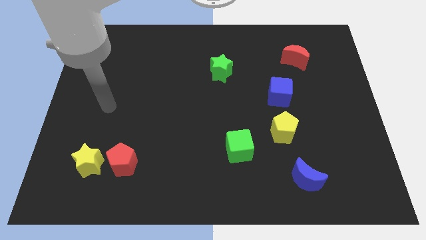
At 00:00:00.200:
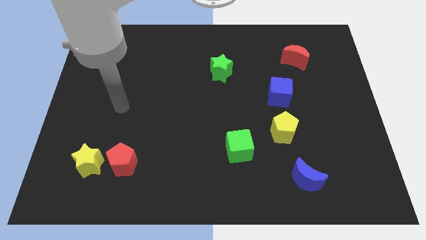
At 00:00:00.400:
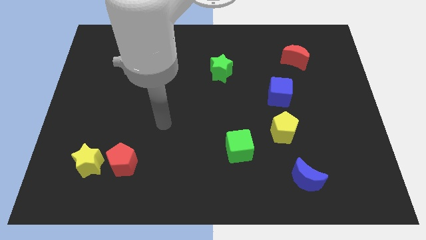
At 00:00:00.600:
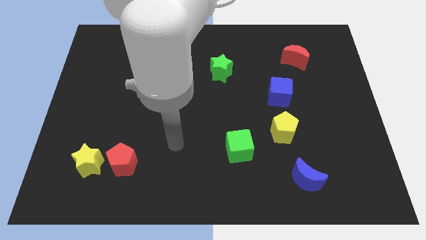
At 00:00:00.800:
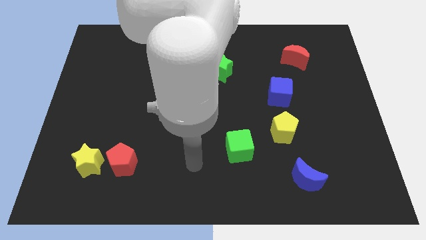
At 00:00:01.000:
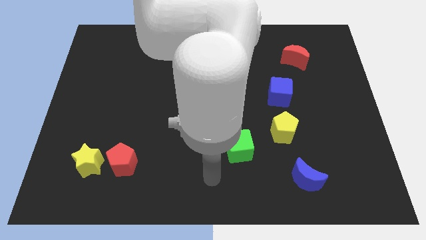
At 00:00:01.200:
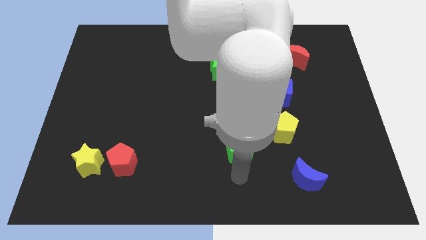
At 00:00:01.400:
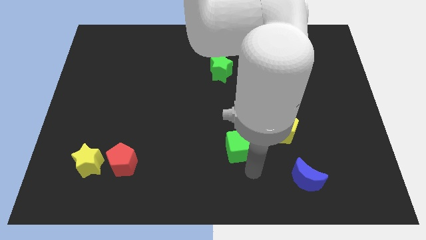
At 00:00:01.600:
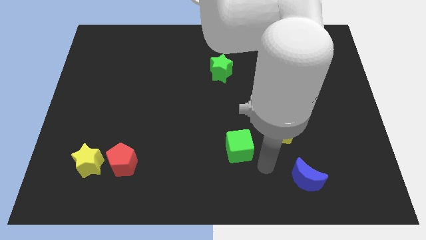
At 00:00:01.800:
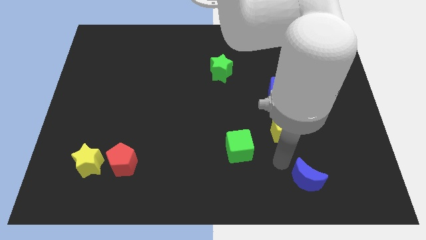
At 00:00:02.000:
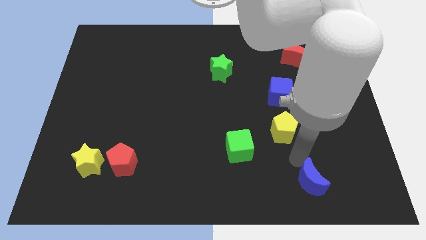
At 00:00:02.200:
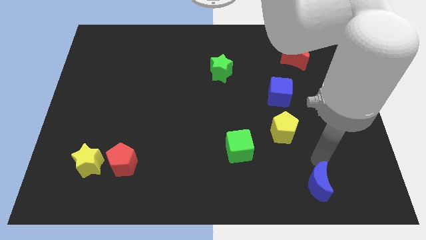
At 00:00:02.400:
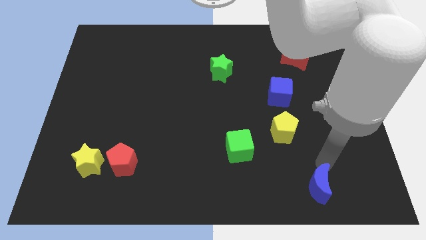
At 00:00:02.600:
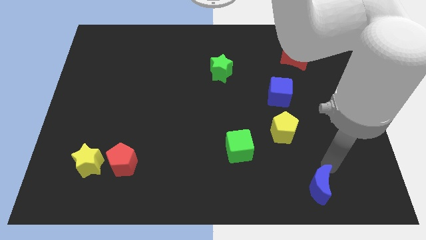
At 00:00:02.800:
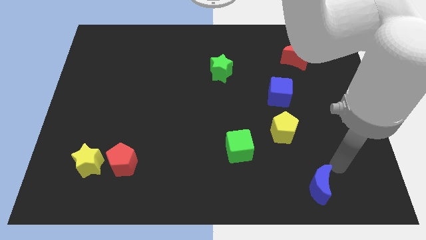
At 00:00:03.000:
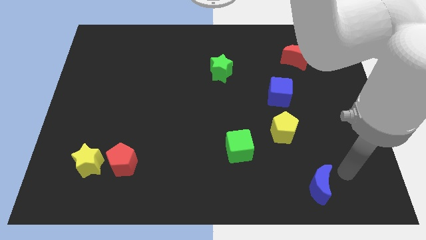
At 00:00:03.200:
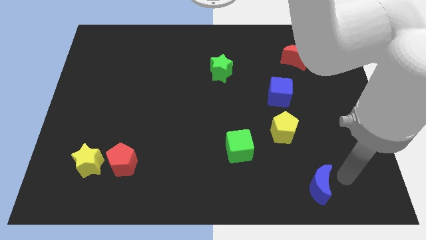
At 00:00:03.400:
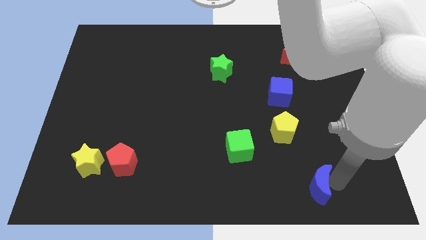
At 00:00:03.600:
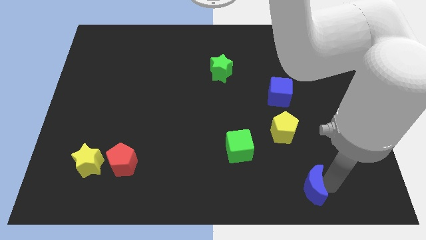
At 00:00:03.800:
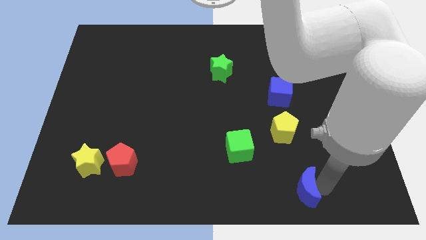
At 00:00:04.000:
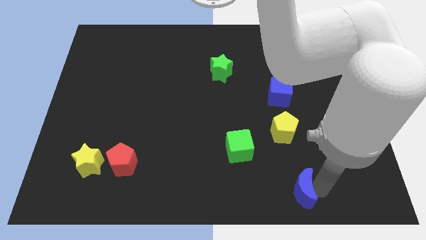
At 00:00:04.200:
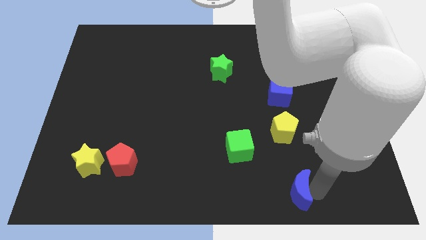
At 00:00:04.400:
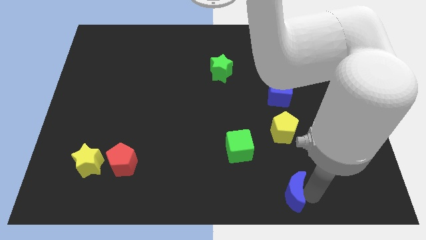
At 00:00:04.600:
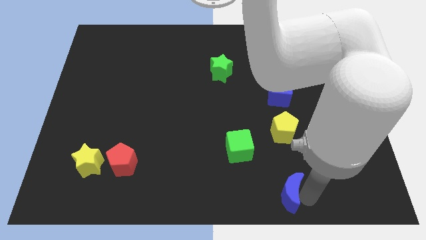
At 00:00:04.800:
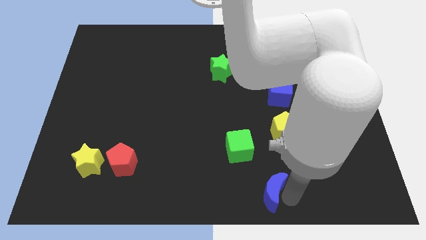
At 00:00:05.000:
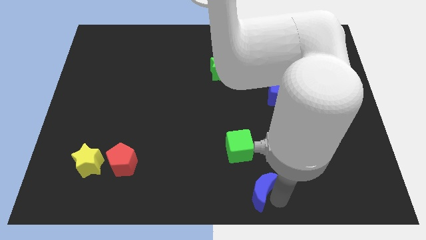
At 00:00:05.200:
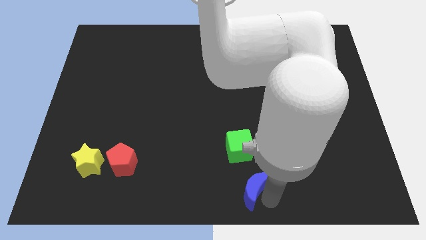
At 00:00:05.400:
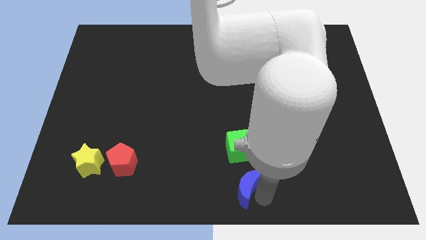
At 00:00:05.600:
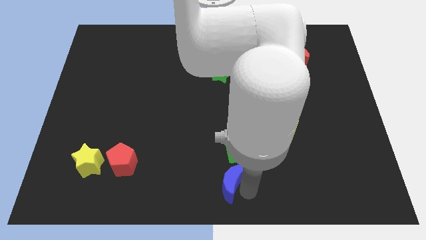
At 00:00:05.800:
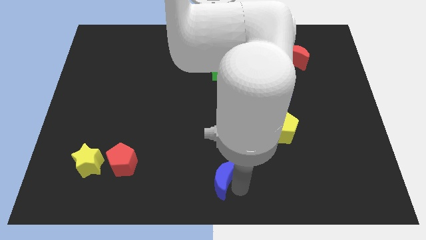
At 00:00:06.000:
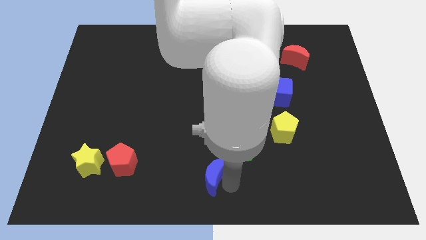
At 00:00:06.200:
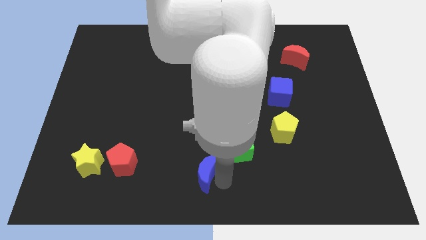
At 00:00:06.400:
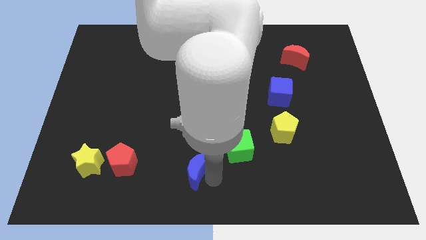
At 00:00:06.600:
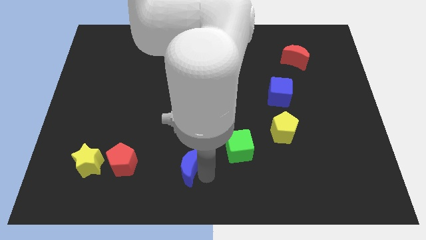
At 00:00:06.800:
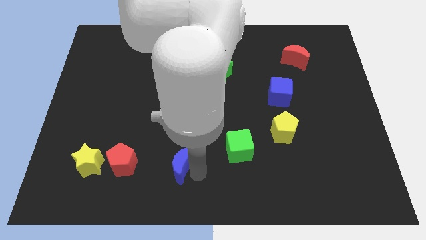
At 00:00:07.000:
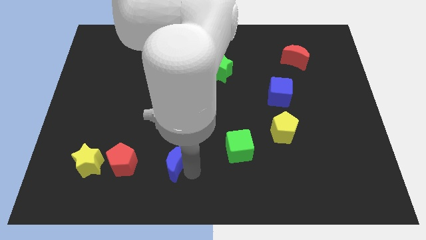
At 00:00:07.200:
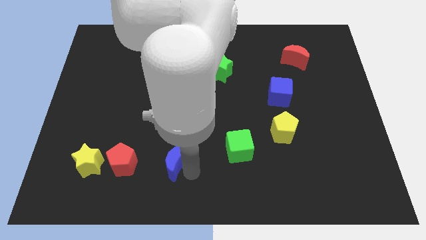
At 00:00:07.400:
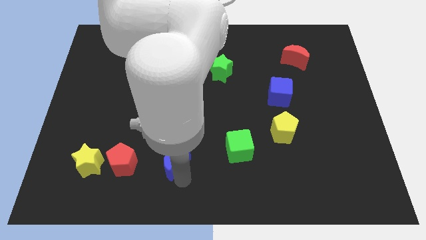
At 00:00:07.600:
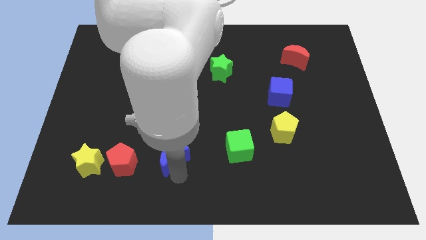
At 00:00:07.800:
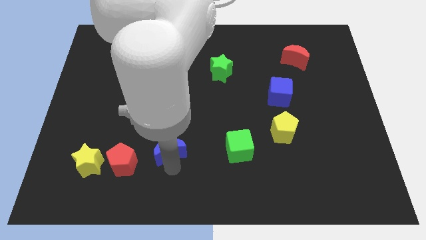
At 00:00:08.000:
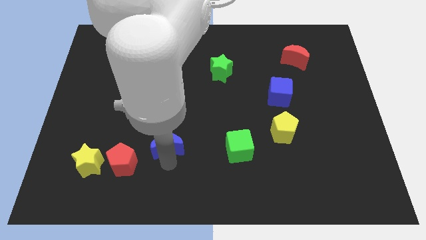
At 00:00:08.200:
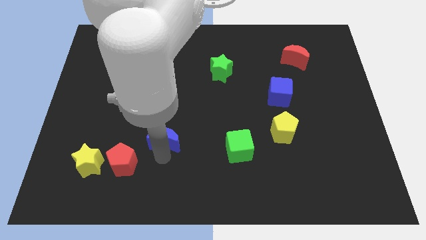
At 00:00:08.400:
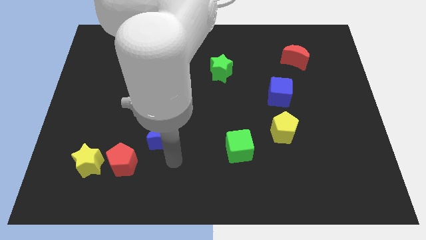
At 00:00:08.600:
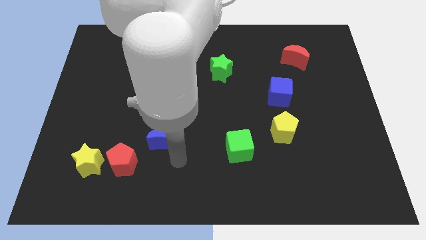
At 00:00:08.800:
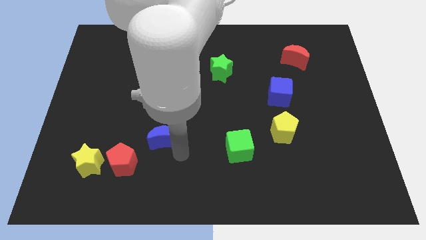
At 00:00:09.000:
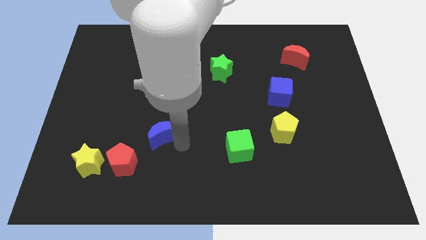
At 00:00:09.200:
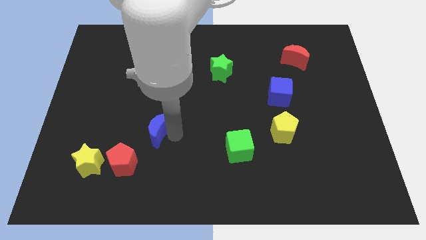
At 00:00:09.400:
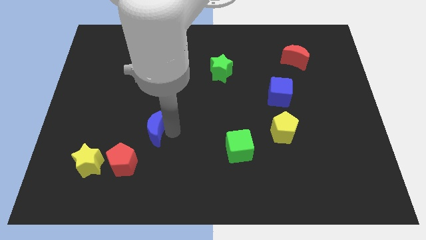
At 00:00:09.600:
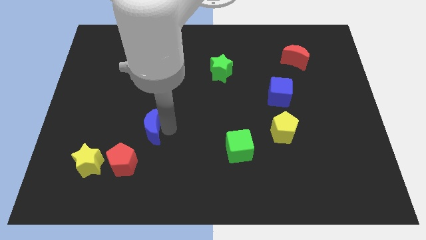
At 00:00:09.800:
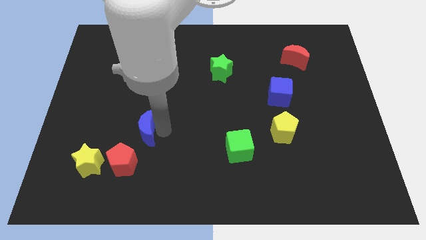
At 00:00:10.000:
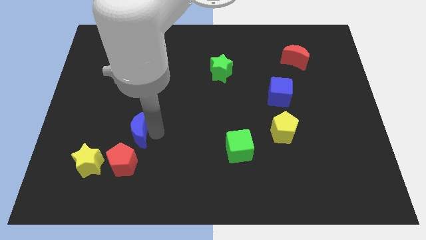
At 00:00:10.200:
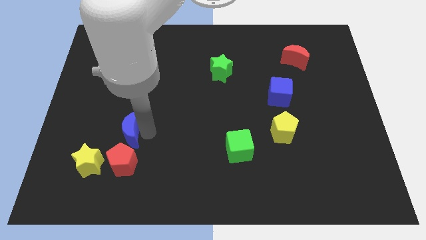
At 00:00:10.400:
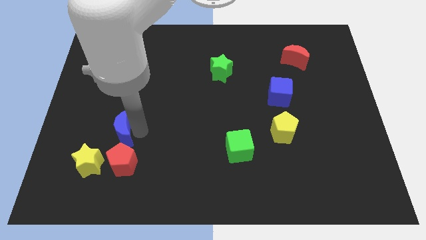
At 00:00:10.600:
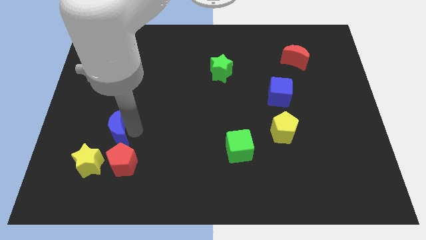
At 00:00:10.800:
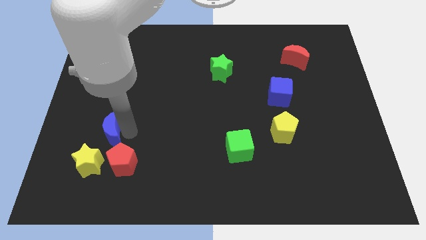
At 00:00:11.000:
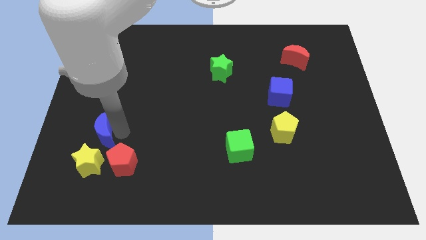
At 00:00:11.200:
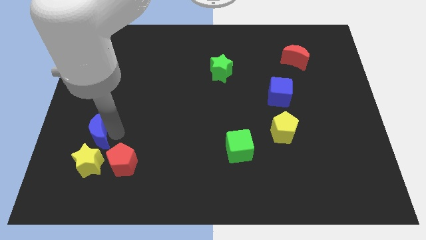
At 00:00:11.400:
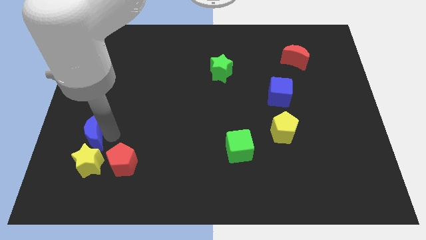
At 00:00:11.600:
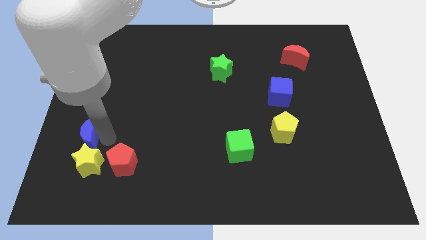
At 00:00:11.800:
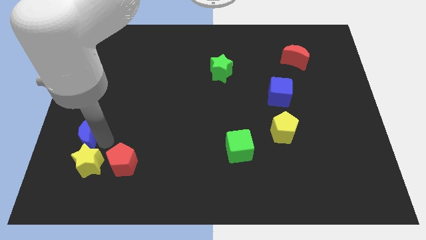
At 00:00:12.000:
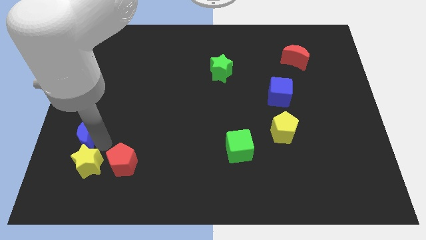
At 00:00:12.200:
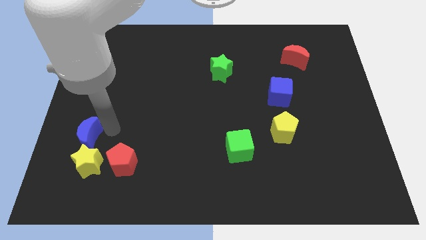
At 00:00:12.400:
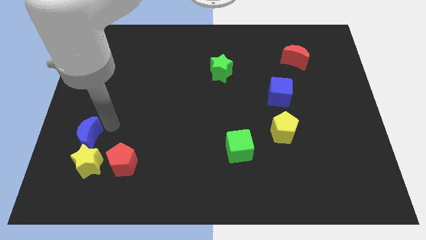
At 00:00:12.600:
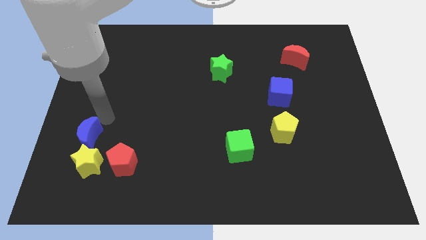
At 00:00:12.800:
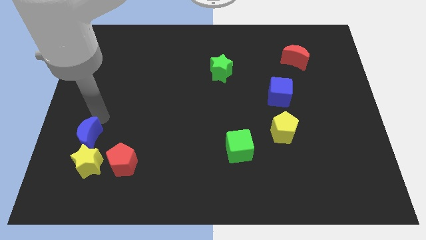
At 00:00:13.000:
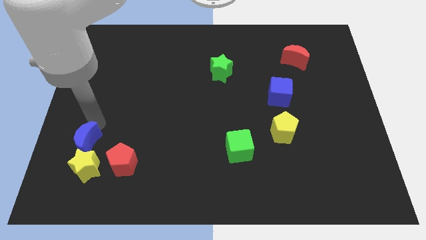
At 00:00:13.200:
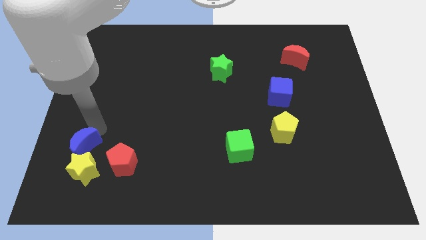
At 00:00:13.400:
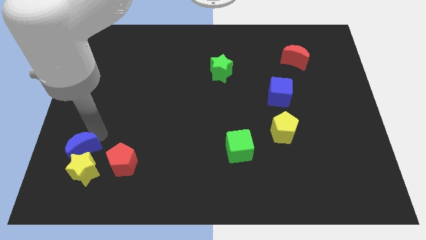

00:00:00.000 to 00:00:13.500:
put the blue moon to the yellow star

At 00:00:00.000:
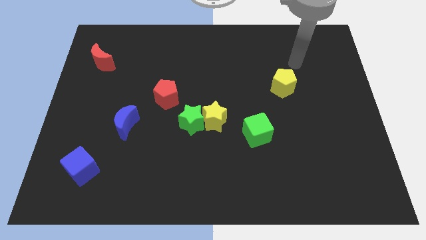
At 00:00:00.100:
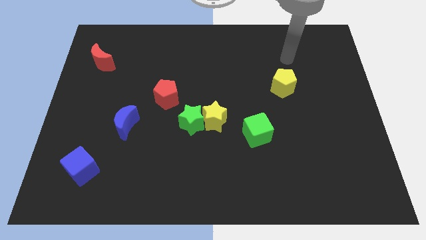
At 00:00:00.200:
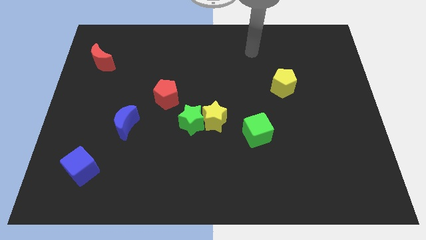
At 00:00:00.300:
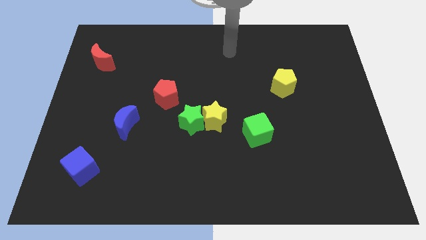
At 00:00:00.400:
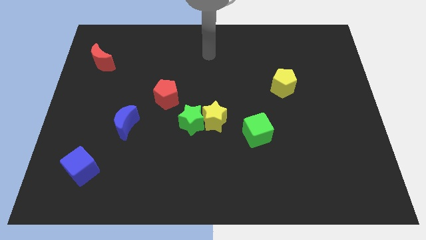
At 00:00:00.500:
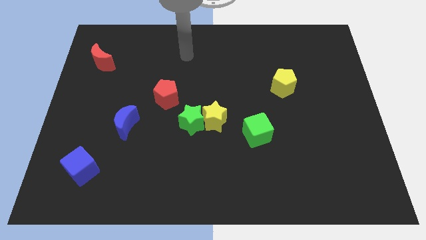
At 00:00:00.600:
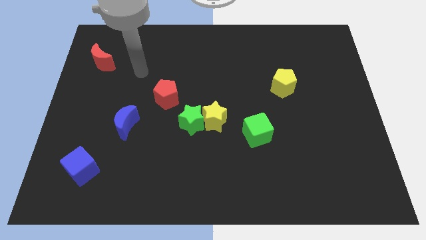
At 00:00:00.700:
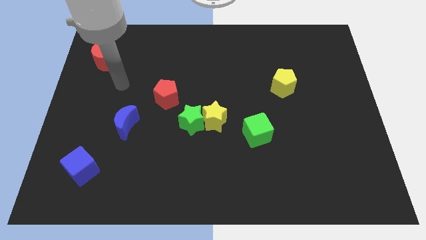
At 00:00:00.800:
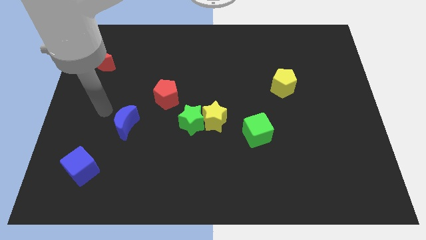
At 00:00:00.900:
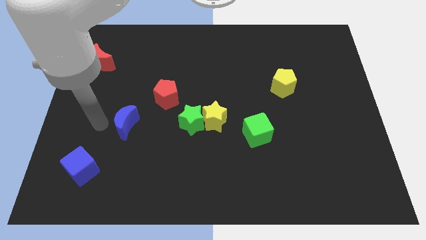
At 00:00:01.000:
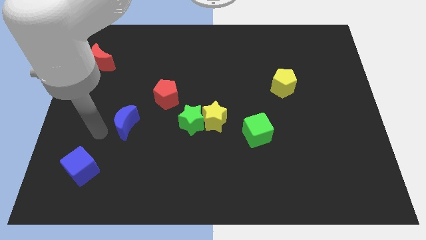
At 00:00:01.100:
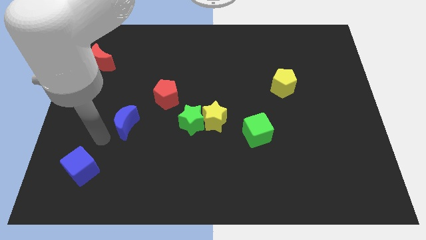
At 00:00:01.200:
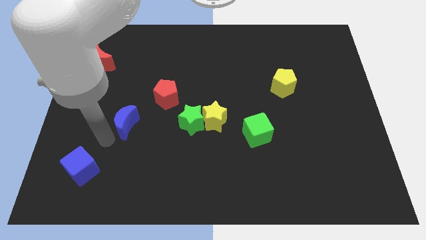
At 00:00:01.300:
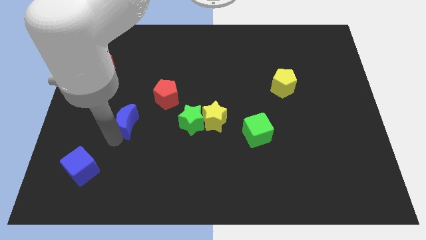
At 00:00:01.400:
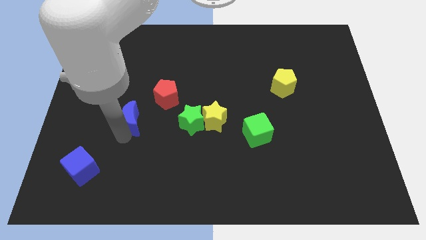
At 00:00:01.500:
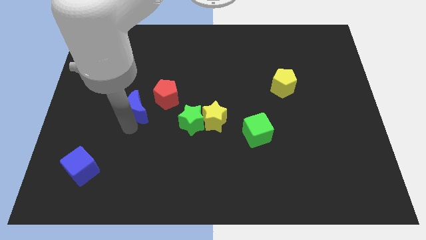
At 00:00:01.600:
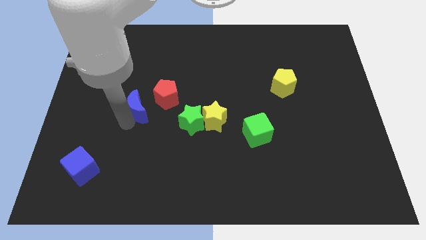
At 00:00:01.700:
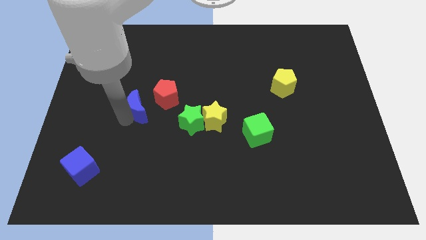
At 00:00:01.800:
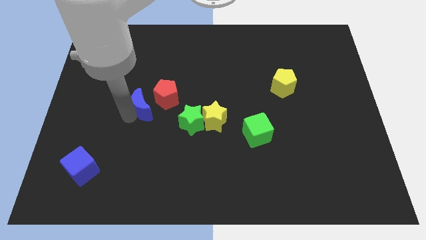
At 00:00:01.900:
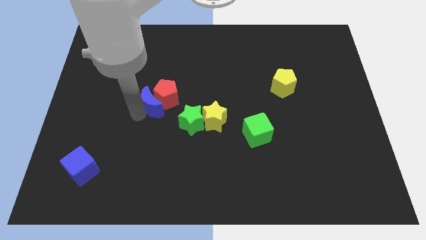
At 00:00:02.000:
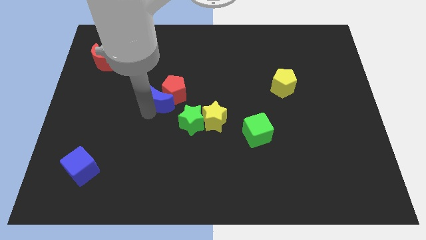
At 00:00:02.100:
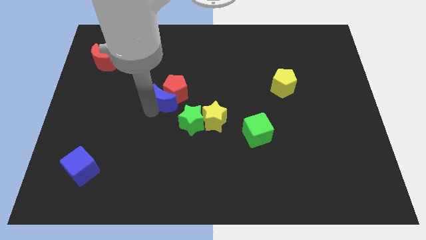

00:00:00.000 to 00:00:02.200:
slide the blue moon close to the red pentagon
